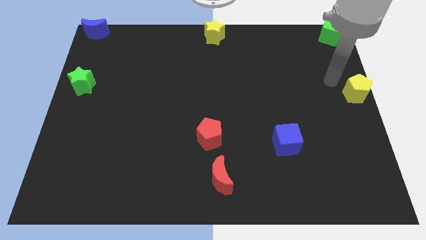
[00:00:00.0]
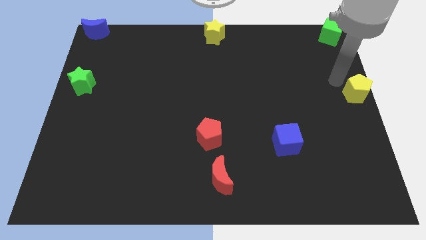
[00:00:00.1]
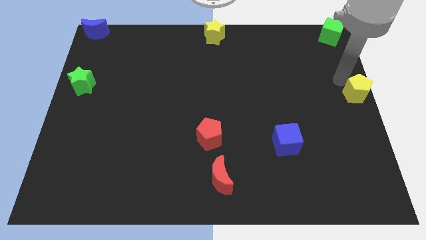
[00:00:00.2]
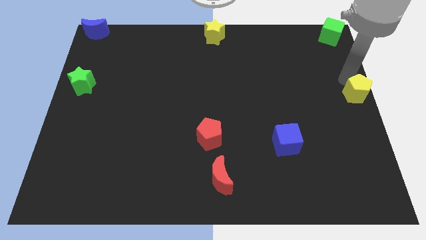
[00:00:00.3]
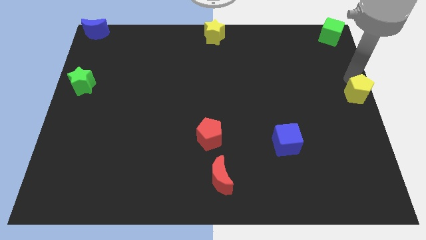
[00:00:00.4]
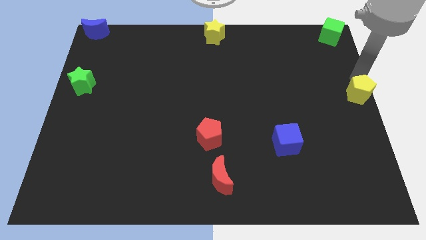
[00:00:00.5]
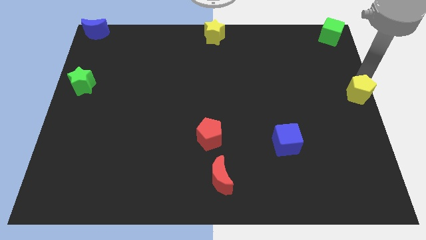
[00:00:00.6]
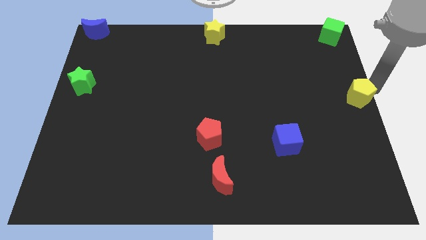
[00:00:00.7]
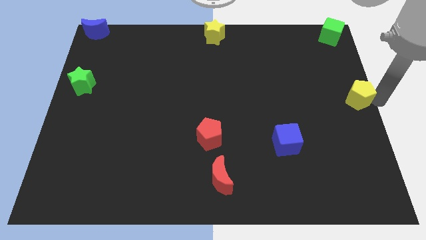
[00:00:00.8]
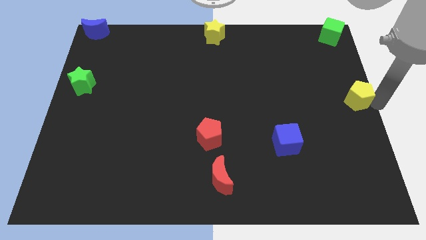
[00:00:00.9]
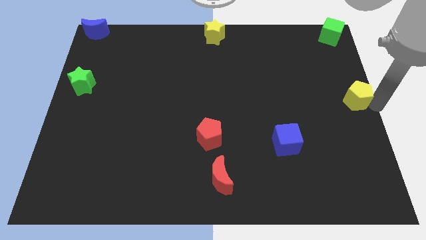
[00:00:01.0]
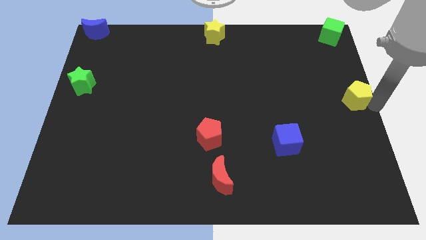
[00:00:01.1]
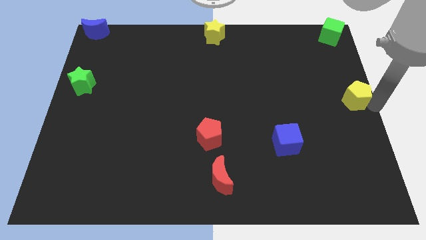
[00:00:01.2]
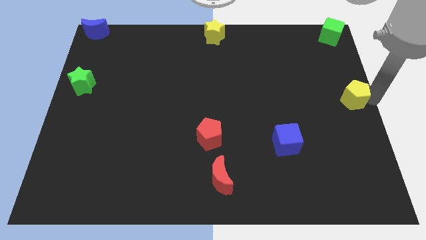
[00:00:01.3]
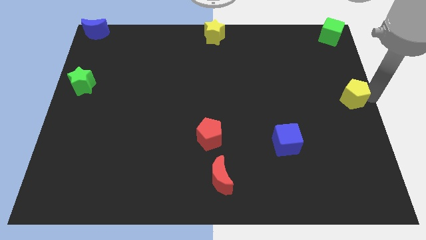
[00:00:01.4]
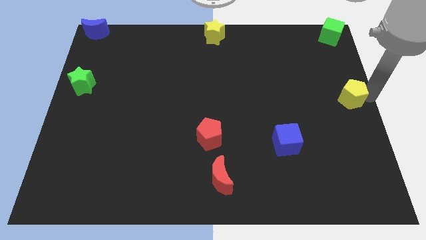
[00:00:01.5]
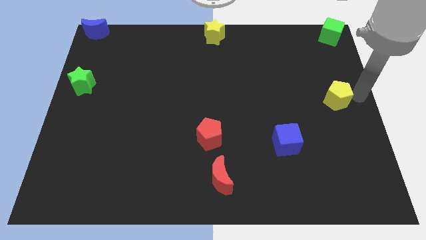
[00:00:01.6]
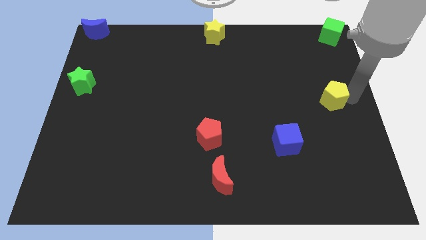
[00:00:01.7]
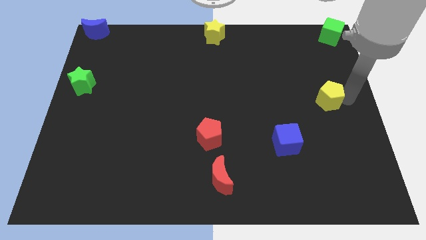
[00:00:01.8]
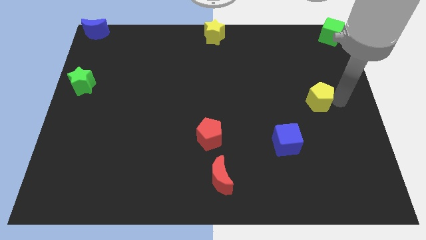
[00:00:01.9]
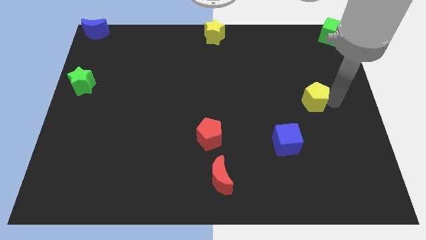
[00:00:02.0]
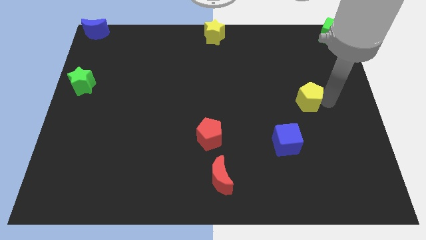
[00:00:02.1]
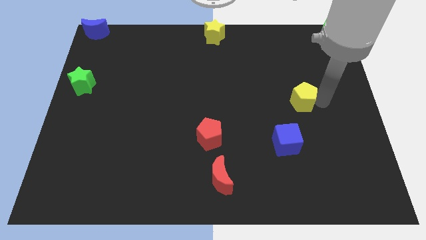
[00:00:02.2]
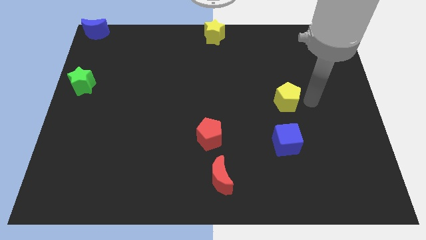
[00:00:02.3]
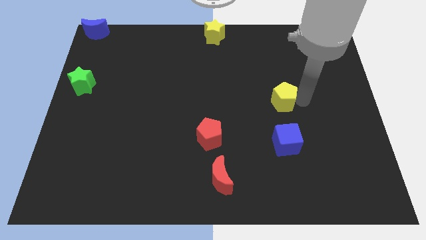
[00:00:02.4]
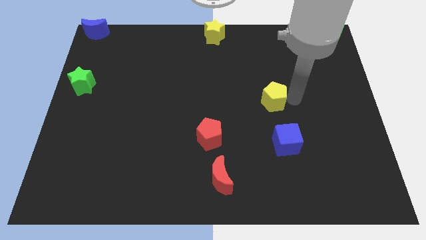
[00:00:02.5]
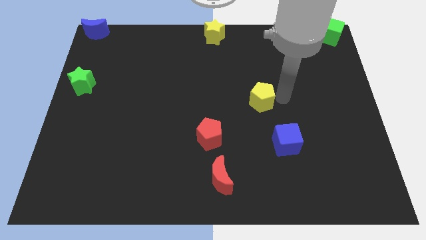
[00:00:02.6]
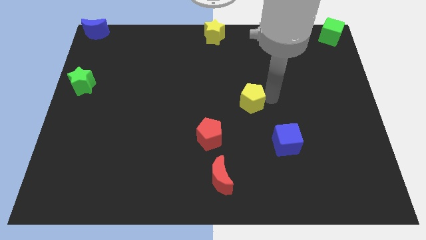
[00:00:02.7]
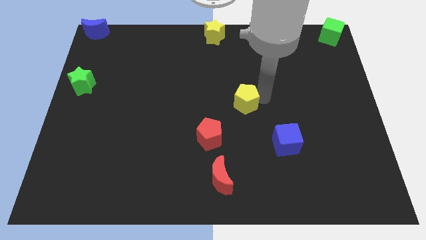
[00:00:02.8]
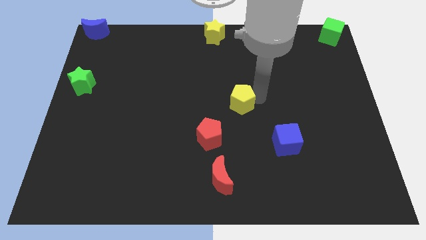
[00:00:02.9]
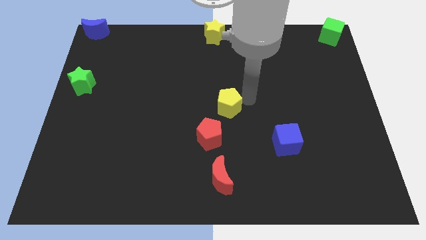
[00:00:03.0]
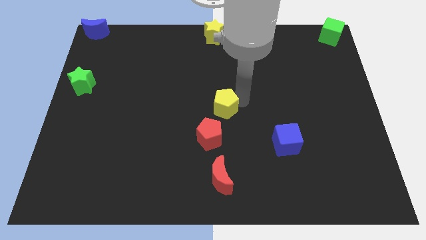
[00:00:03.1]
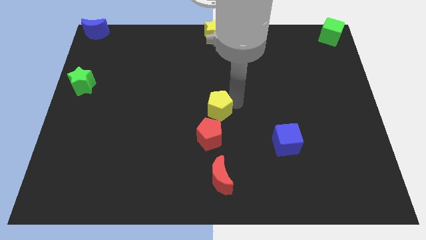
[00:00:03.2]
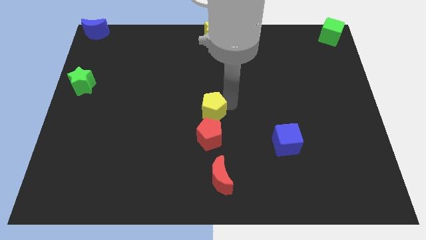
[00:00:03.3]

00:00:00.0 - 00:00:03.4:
push the yellow pentagon above the red pentagon

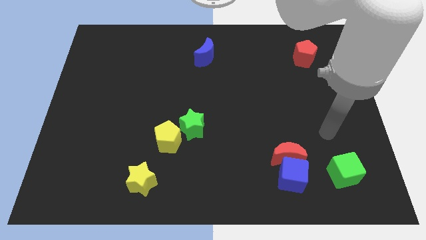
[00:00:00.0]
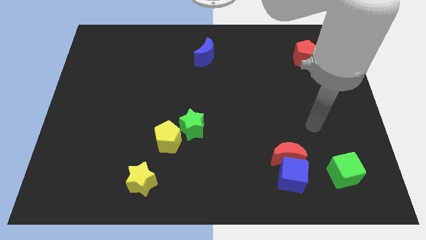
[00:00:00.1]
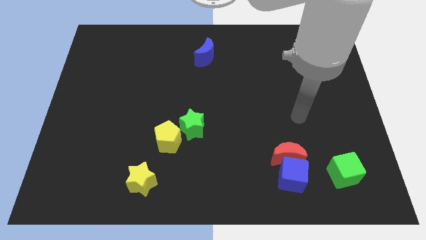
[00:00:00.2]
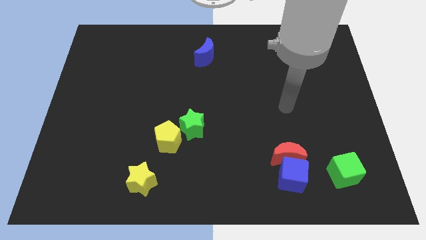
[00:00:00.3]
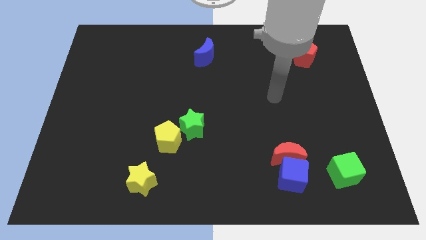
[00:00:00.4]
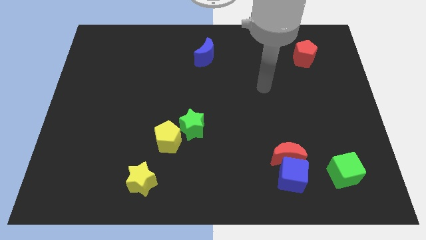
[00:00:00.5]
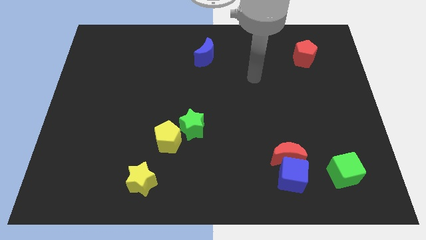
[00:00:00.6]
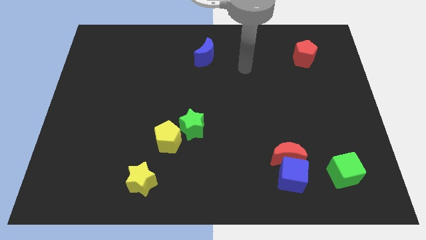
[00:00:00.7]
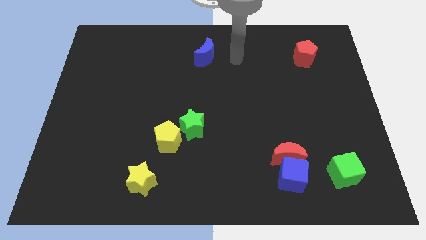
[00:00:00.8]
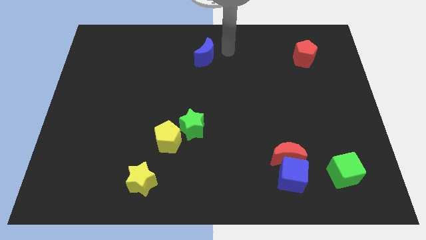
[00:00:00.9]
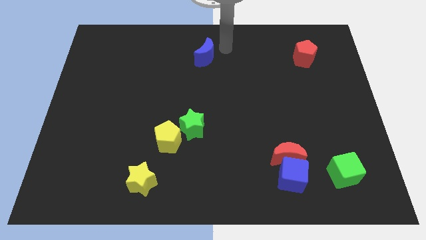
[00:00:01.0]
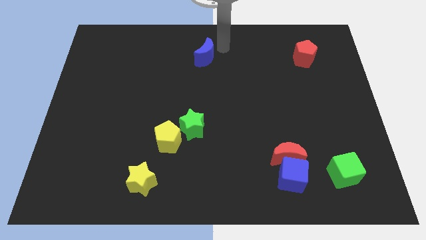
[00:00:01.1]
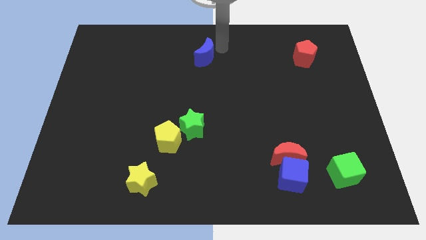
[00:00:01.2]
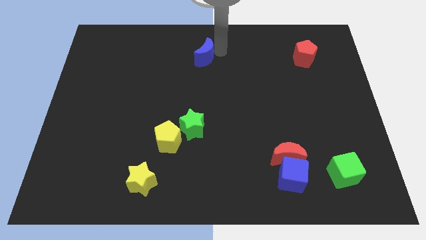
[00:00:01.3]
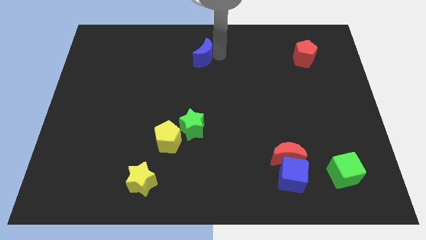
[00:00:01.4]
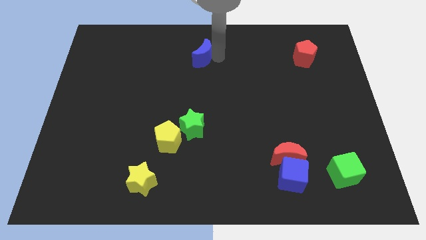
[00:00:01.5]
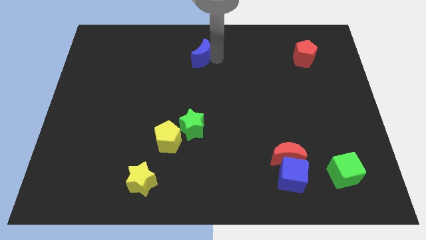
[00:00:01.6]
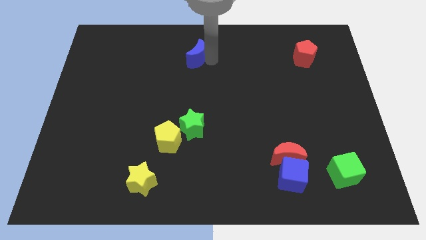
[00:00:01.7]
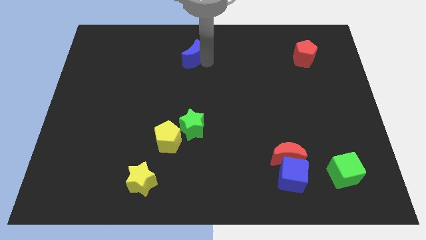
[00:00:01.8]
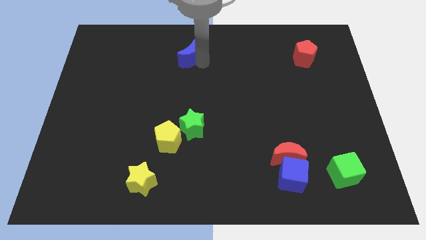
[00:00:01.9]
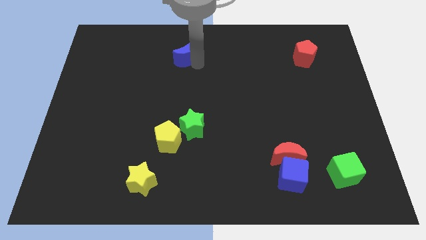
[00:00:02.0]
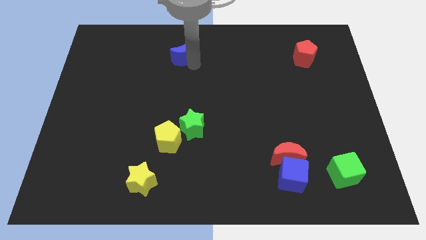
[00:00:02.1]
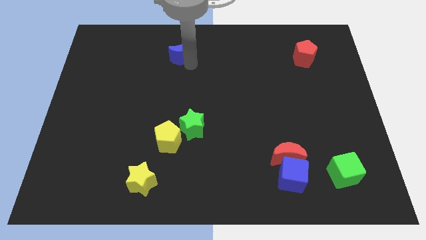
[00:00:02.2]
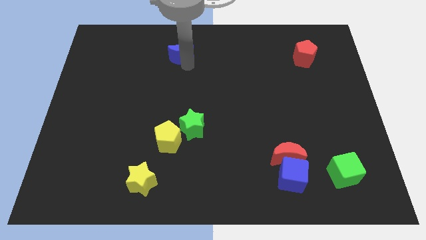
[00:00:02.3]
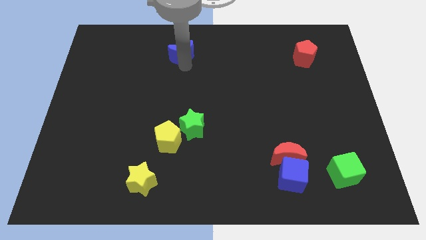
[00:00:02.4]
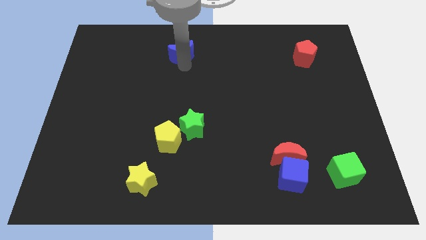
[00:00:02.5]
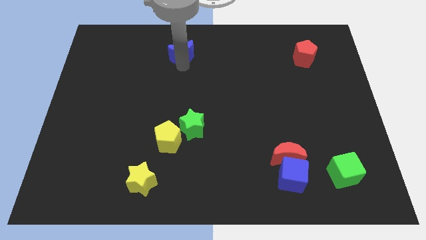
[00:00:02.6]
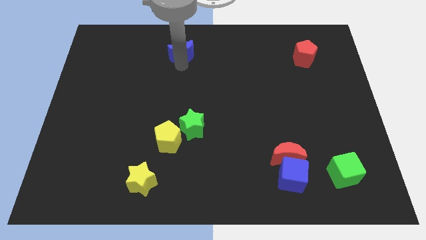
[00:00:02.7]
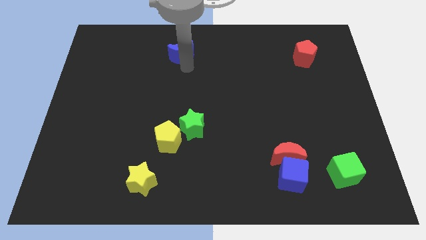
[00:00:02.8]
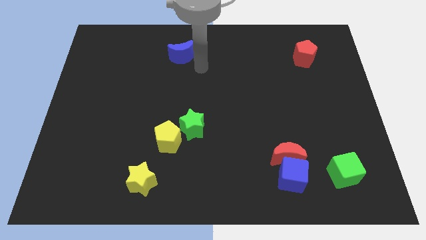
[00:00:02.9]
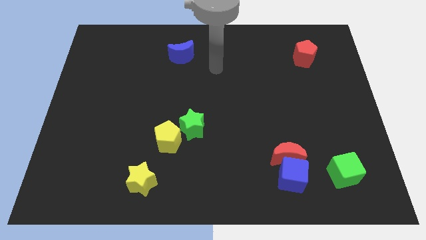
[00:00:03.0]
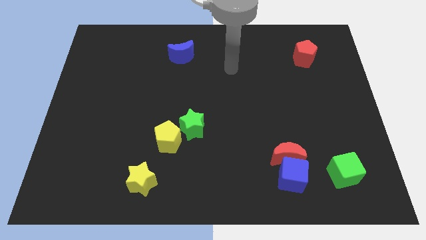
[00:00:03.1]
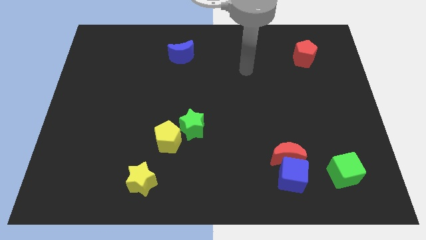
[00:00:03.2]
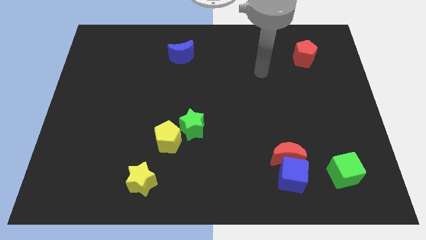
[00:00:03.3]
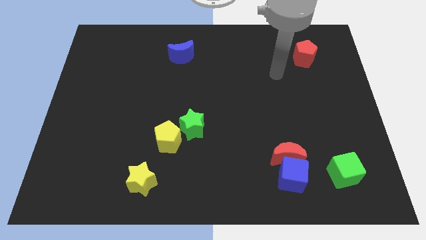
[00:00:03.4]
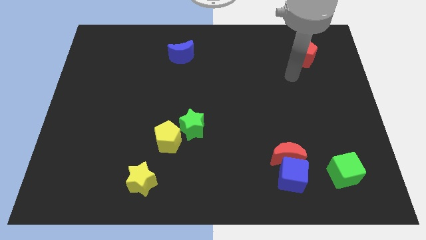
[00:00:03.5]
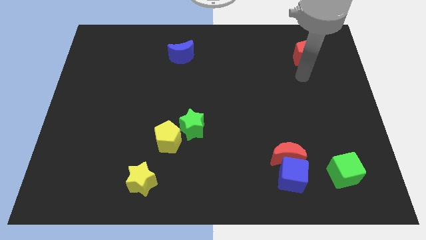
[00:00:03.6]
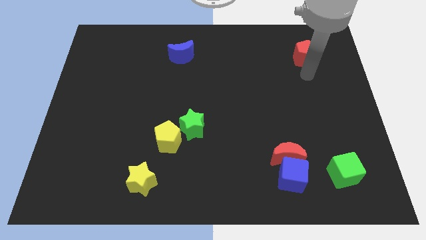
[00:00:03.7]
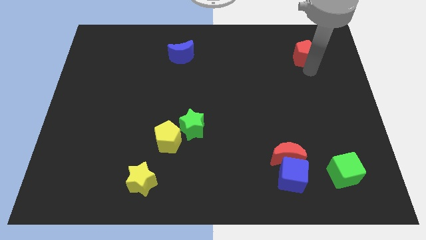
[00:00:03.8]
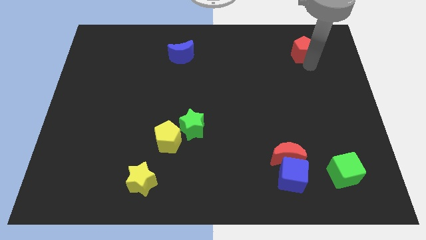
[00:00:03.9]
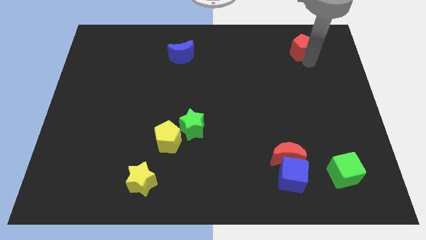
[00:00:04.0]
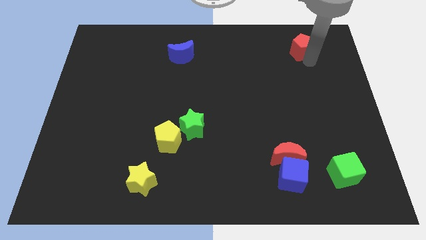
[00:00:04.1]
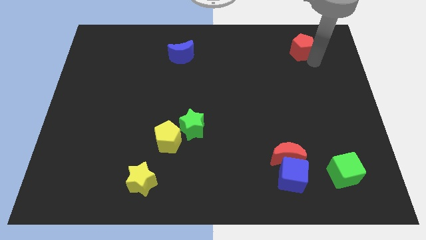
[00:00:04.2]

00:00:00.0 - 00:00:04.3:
place the arm down to the red pentagon

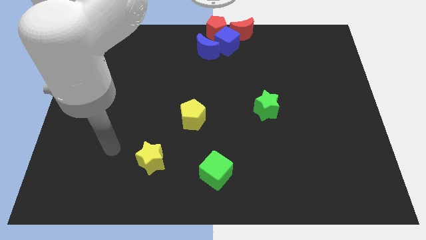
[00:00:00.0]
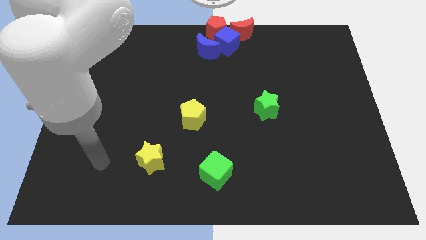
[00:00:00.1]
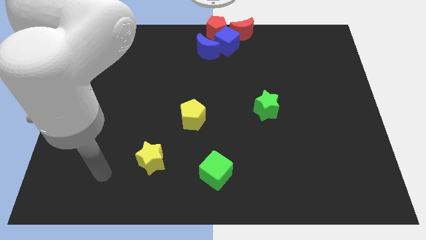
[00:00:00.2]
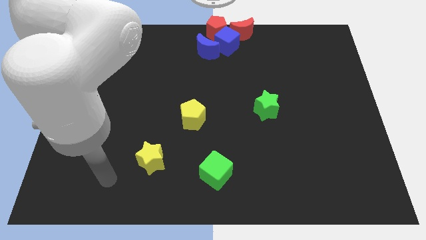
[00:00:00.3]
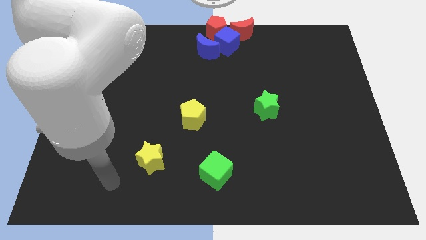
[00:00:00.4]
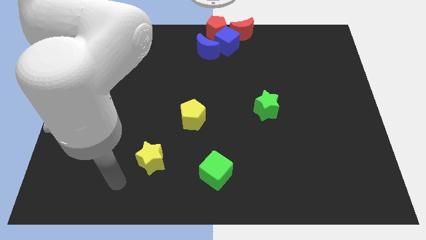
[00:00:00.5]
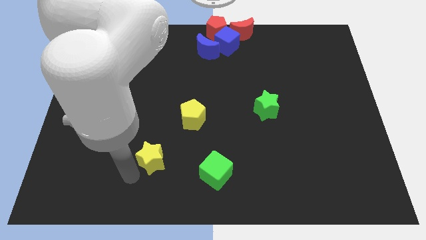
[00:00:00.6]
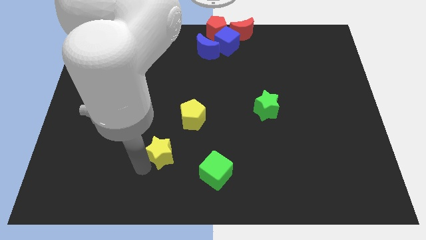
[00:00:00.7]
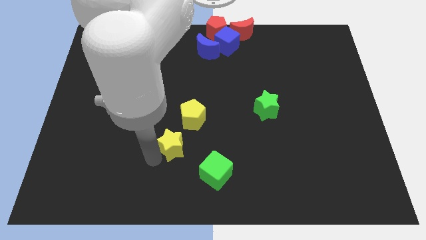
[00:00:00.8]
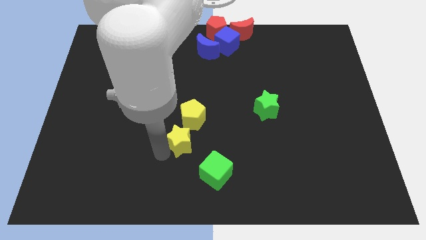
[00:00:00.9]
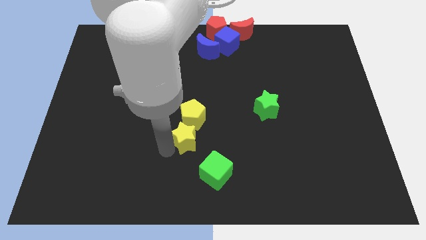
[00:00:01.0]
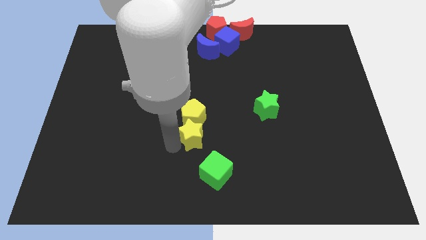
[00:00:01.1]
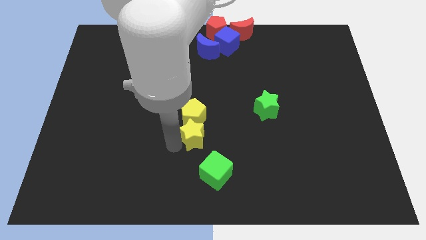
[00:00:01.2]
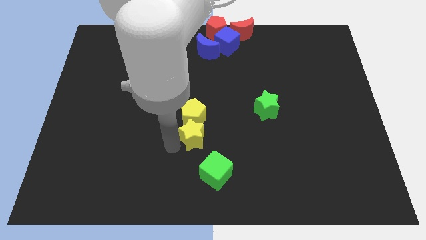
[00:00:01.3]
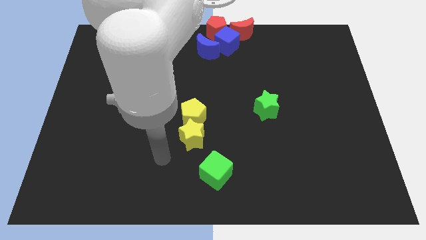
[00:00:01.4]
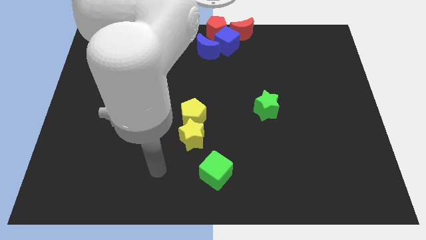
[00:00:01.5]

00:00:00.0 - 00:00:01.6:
push the yellow star into the yellow pentagon
